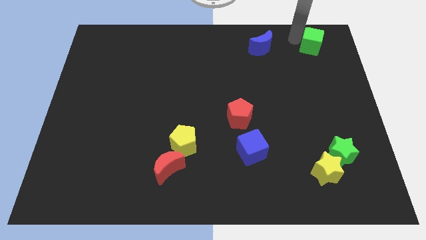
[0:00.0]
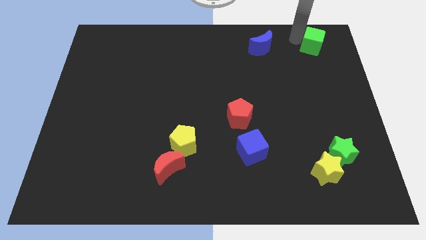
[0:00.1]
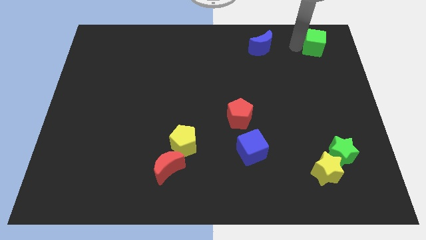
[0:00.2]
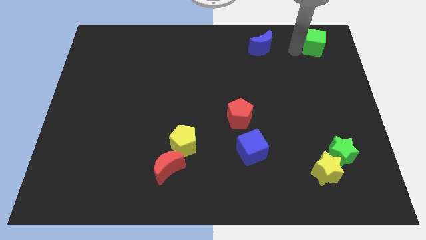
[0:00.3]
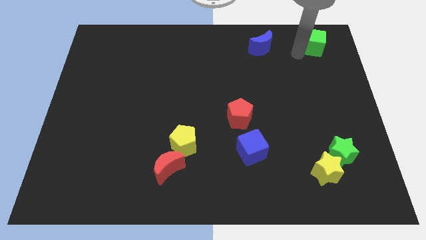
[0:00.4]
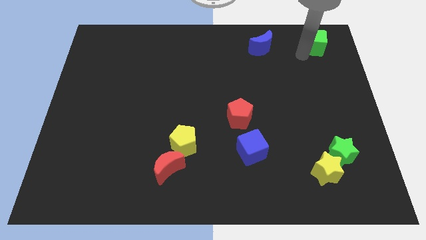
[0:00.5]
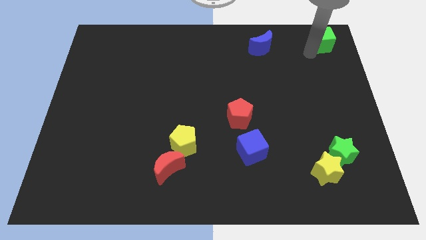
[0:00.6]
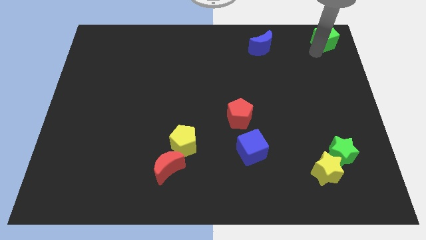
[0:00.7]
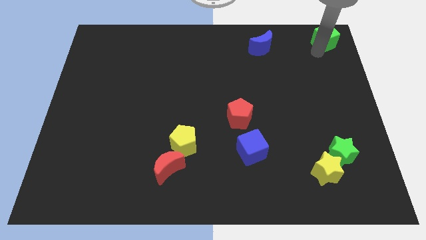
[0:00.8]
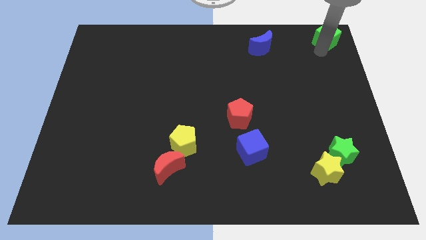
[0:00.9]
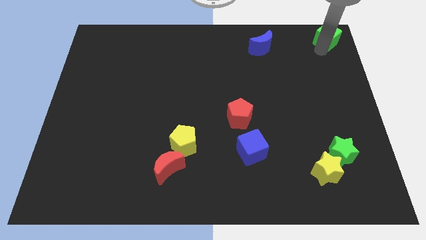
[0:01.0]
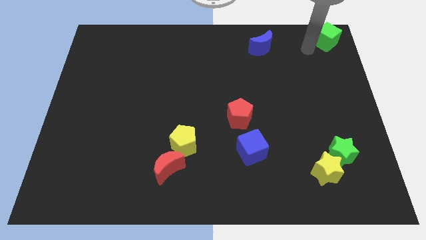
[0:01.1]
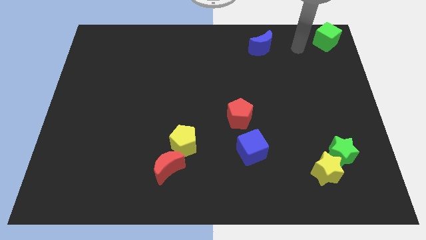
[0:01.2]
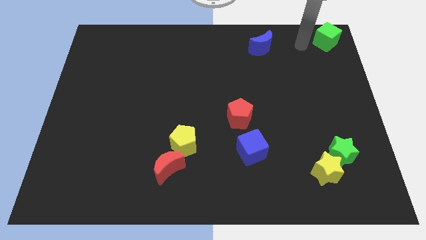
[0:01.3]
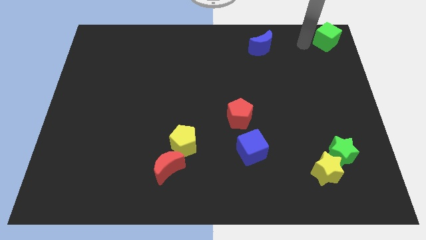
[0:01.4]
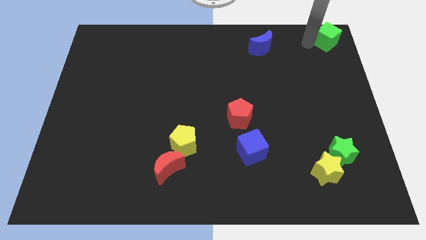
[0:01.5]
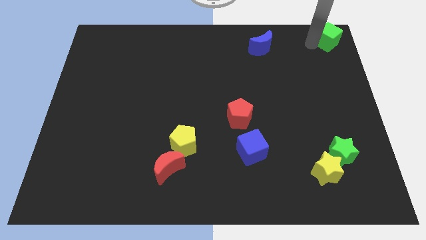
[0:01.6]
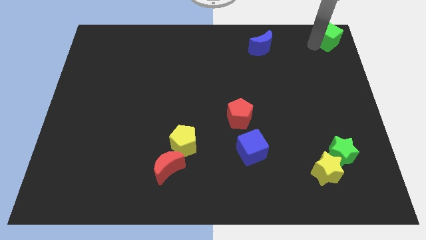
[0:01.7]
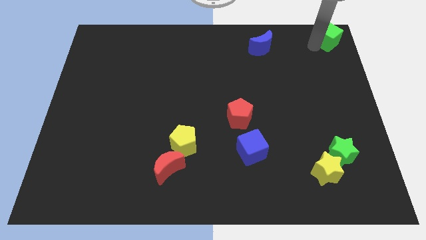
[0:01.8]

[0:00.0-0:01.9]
push the green cube to the top right corner

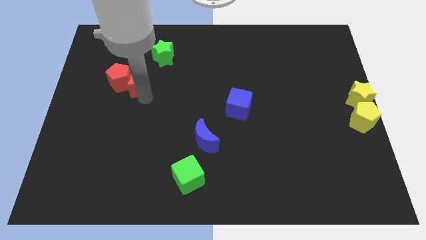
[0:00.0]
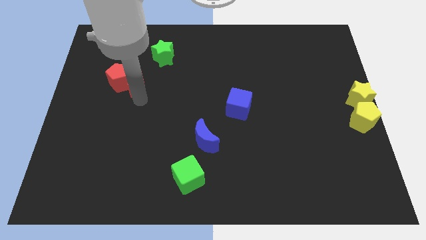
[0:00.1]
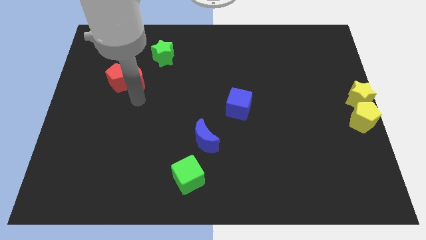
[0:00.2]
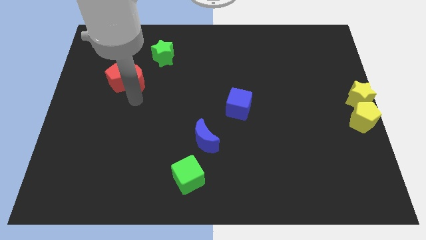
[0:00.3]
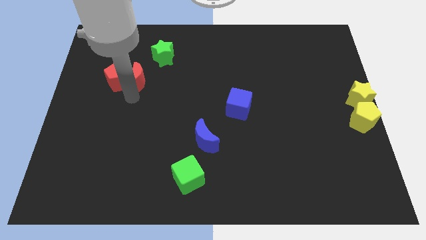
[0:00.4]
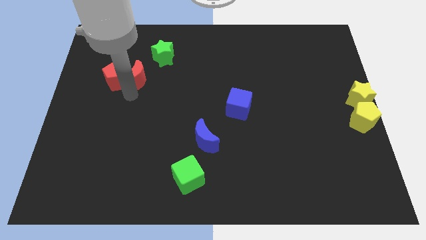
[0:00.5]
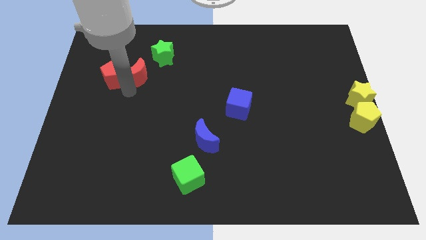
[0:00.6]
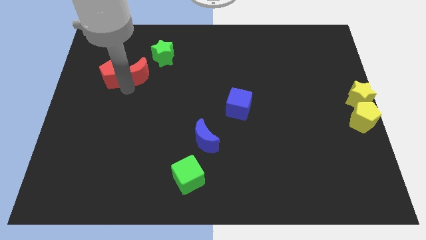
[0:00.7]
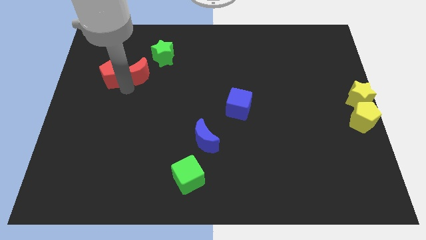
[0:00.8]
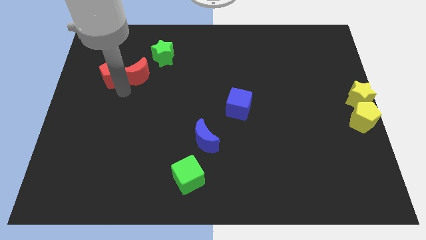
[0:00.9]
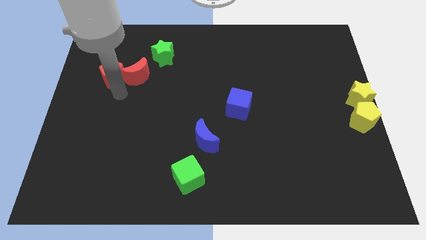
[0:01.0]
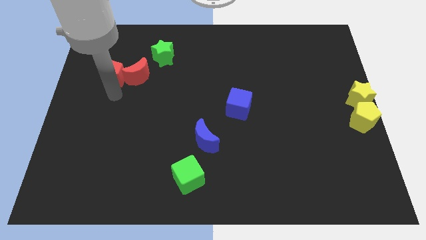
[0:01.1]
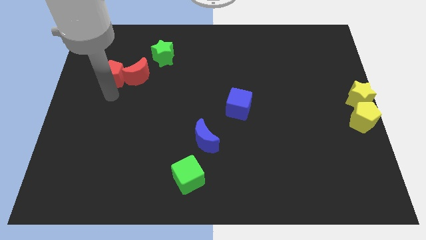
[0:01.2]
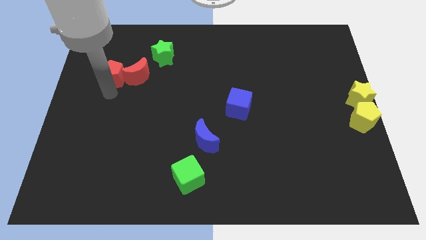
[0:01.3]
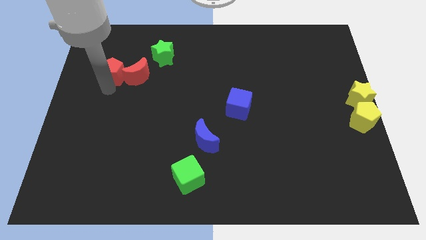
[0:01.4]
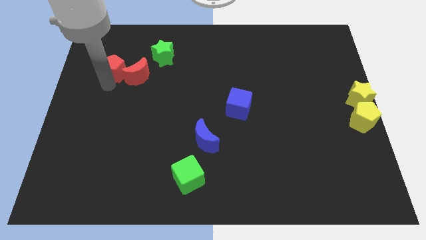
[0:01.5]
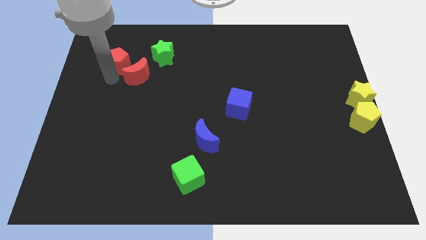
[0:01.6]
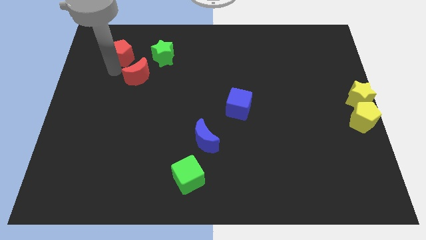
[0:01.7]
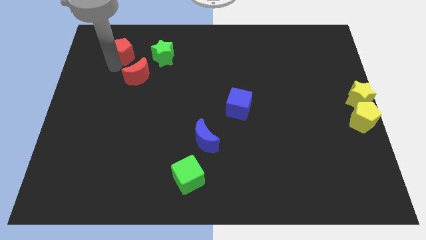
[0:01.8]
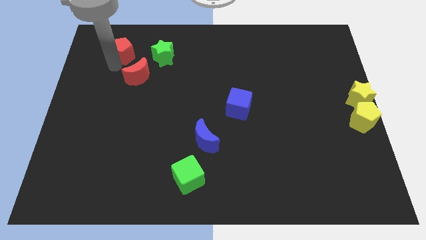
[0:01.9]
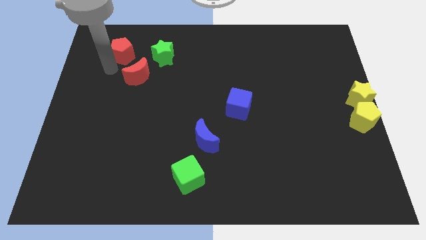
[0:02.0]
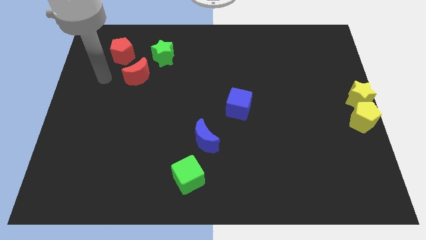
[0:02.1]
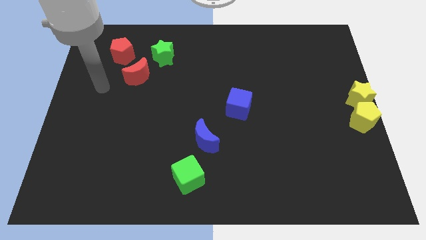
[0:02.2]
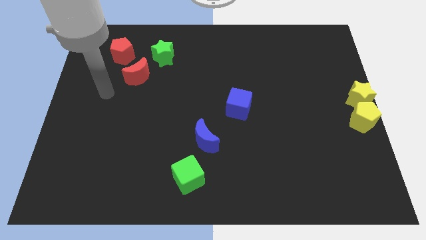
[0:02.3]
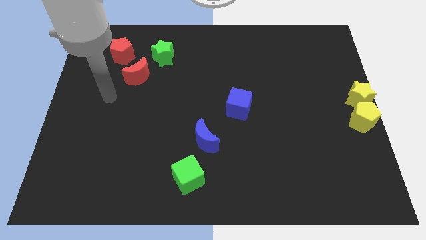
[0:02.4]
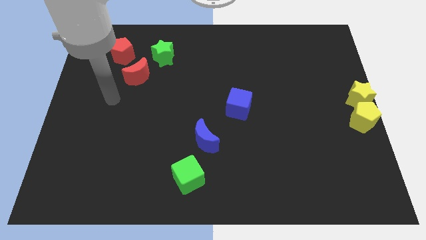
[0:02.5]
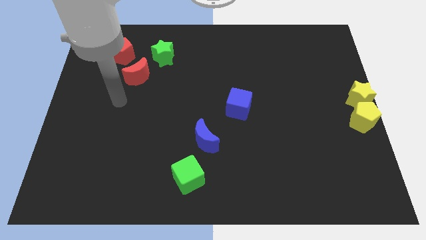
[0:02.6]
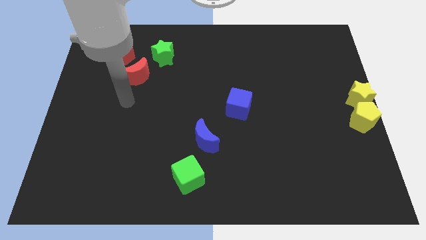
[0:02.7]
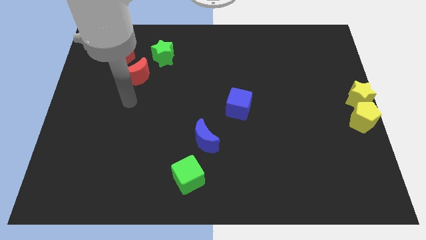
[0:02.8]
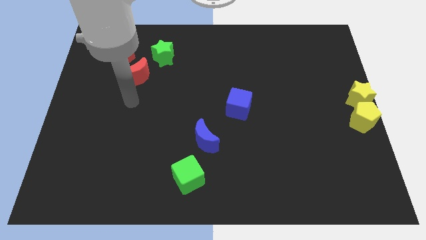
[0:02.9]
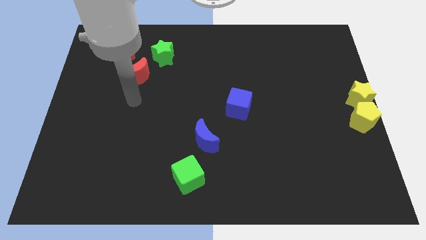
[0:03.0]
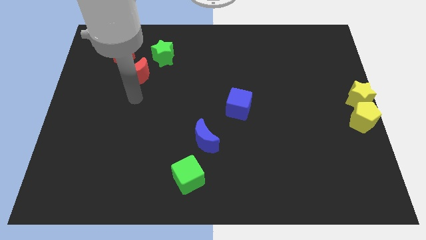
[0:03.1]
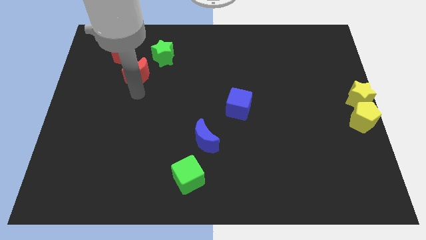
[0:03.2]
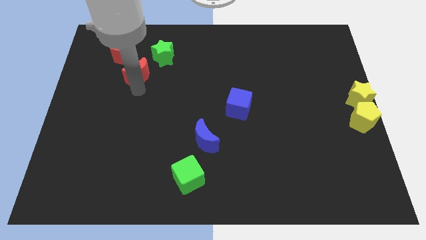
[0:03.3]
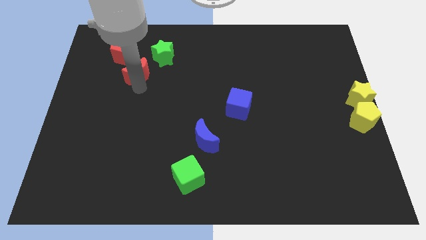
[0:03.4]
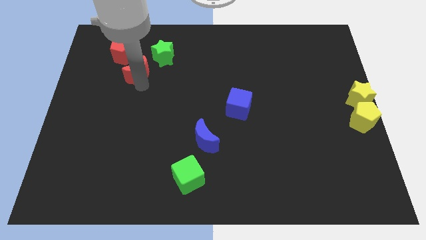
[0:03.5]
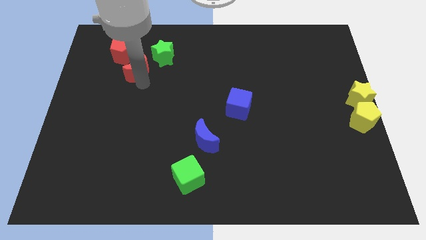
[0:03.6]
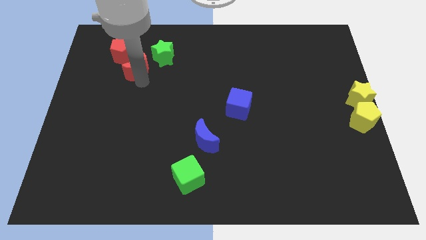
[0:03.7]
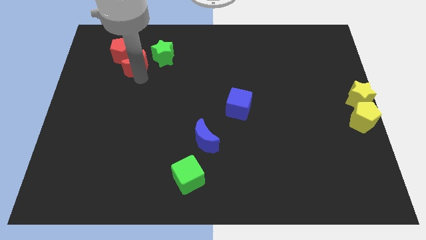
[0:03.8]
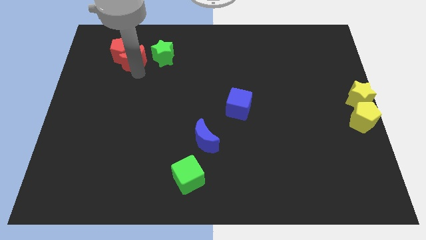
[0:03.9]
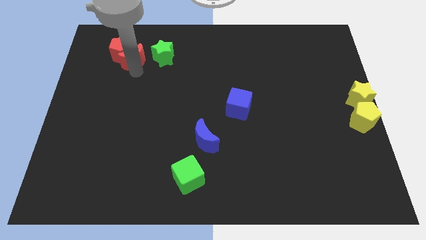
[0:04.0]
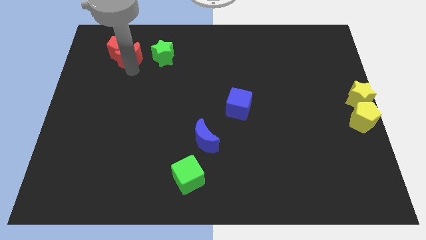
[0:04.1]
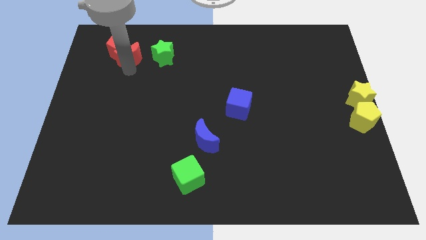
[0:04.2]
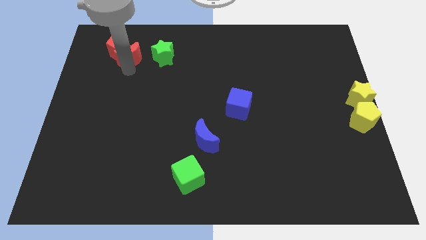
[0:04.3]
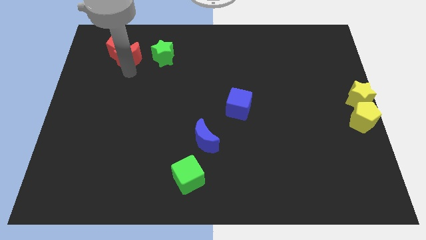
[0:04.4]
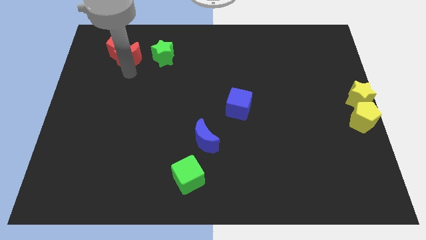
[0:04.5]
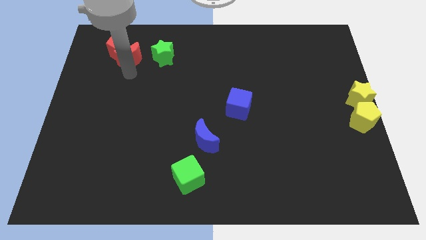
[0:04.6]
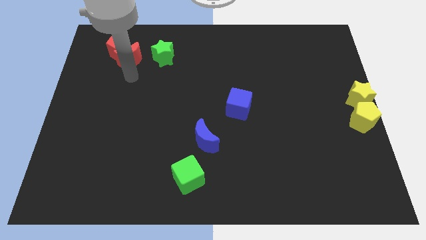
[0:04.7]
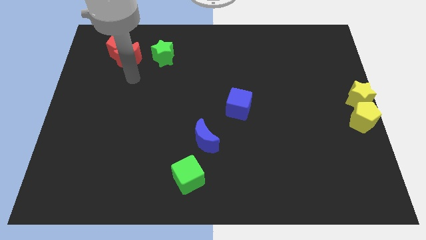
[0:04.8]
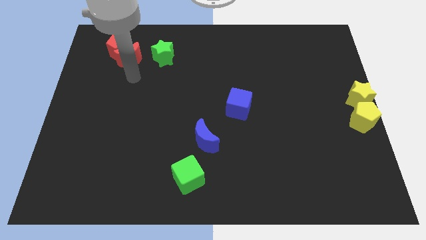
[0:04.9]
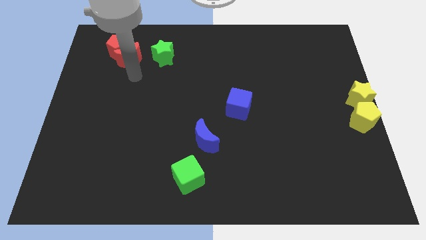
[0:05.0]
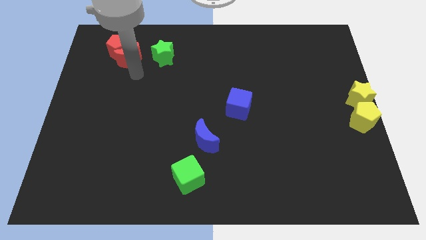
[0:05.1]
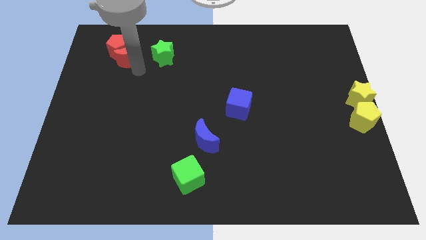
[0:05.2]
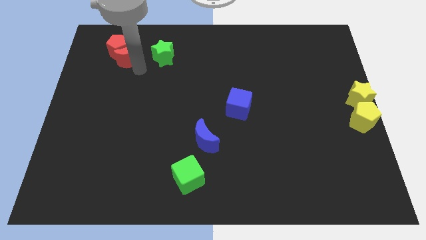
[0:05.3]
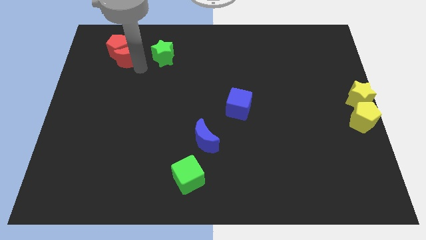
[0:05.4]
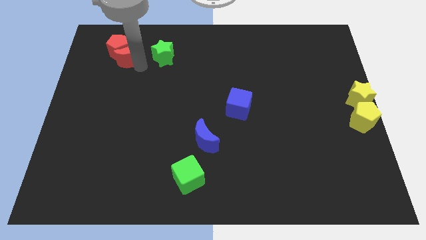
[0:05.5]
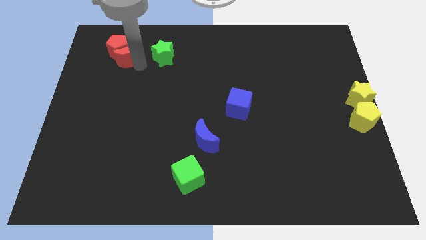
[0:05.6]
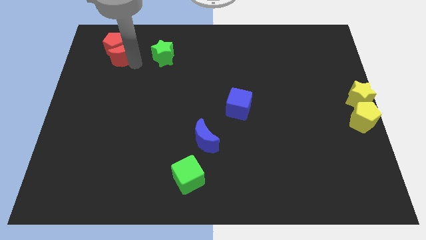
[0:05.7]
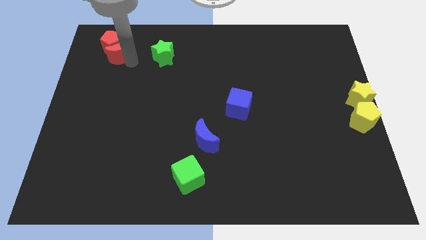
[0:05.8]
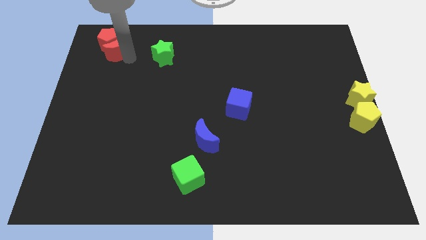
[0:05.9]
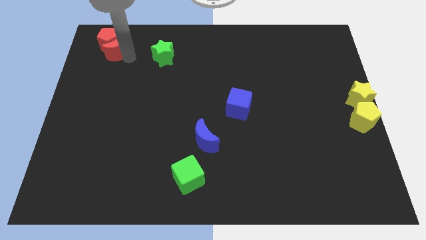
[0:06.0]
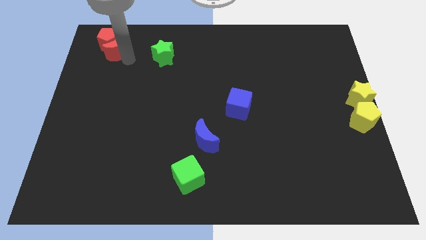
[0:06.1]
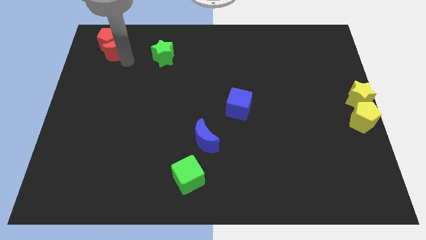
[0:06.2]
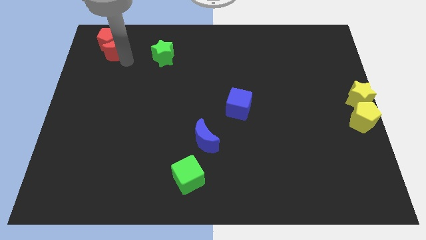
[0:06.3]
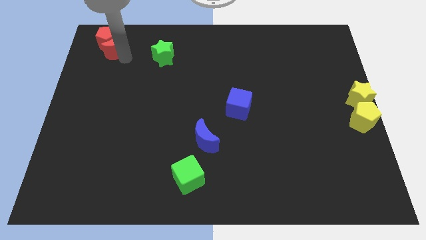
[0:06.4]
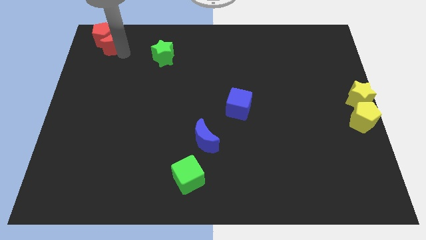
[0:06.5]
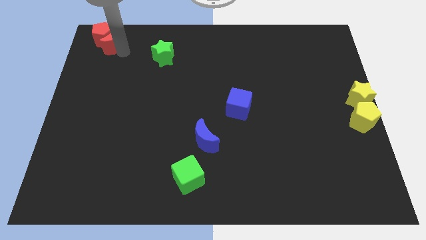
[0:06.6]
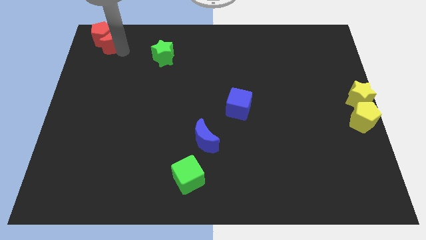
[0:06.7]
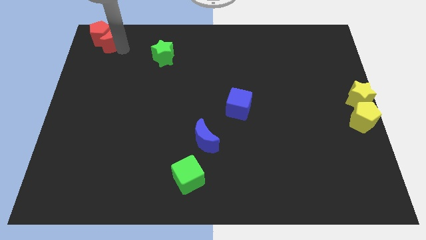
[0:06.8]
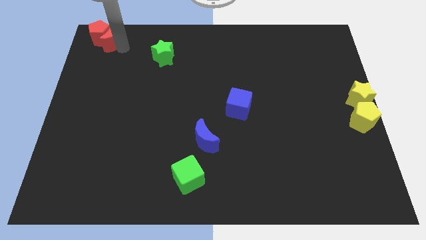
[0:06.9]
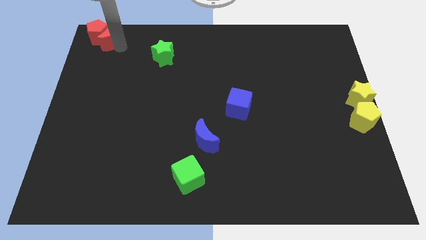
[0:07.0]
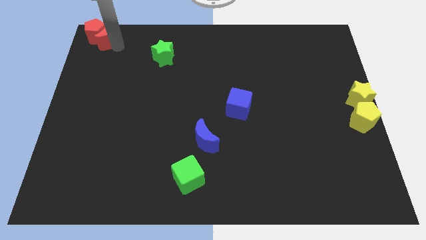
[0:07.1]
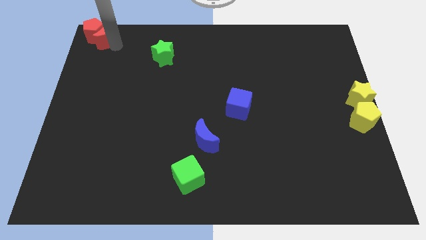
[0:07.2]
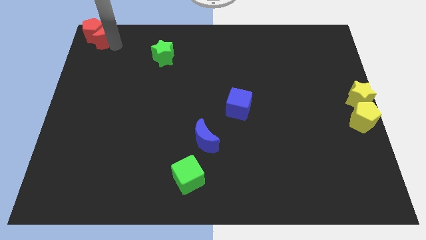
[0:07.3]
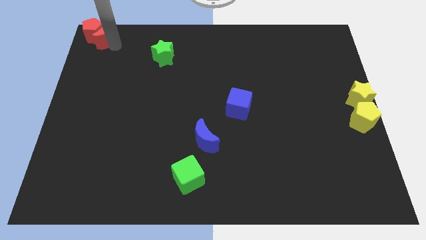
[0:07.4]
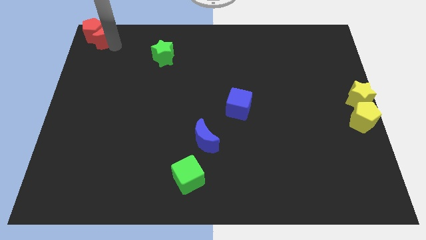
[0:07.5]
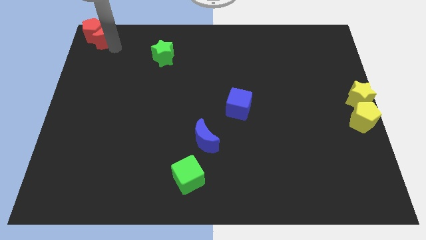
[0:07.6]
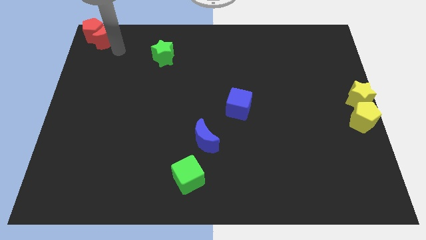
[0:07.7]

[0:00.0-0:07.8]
push the red blocks to the top left corner of the board
